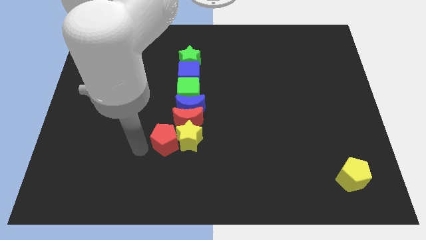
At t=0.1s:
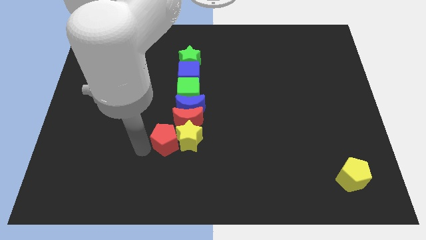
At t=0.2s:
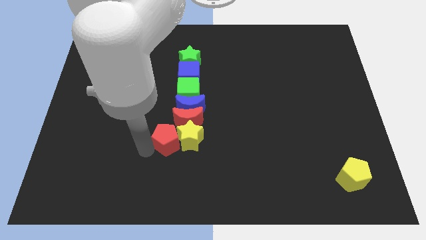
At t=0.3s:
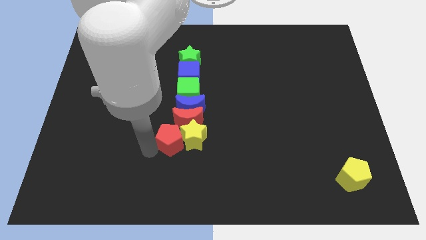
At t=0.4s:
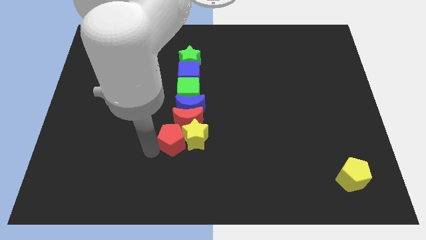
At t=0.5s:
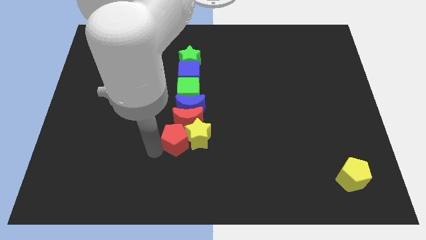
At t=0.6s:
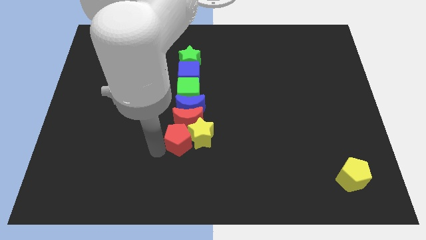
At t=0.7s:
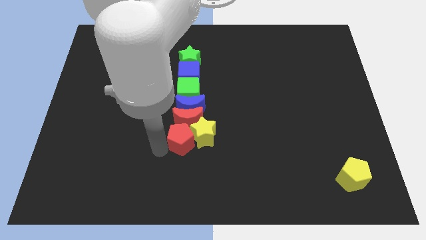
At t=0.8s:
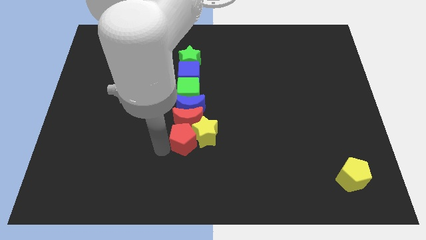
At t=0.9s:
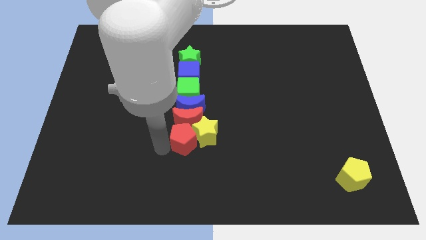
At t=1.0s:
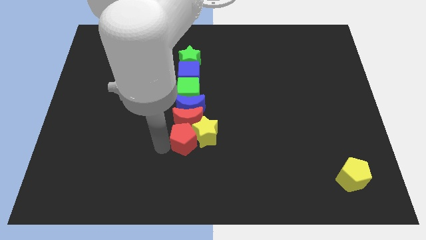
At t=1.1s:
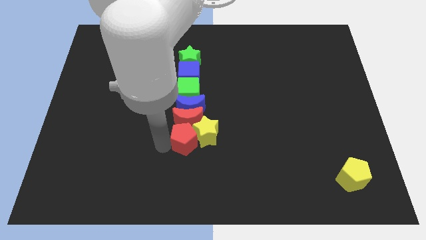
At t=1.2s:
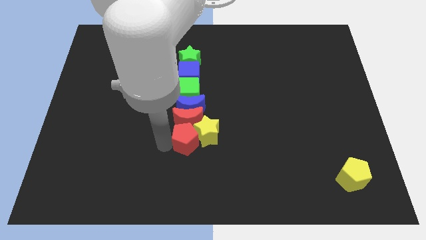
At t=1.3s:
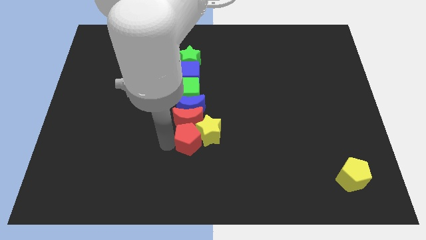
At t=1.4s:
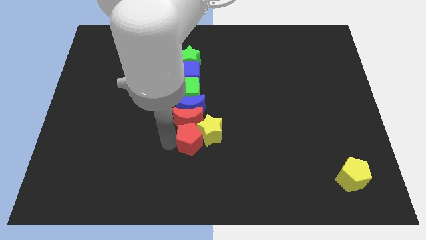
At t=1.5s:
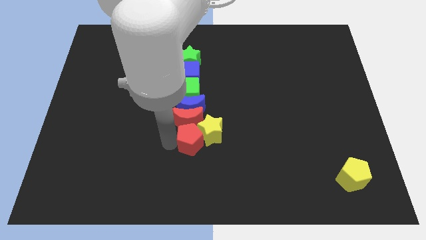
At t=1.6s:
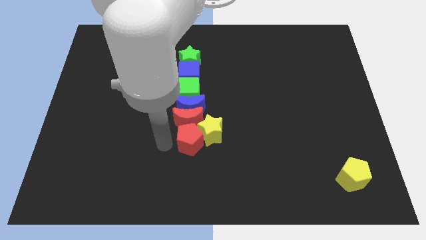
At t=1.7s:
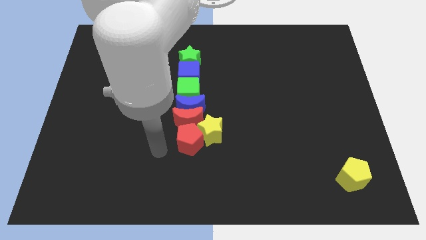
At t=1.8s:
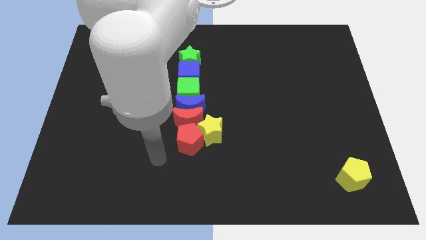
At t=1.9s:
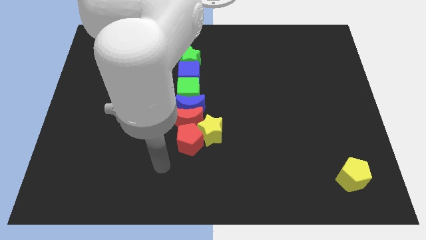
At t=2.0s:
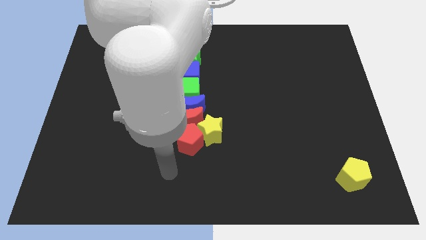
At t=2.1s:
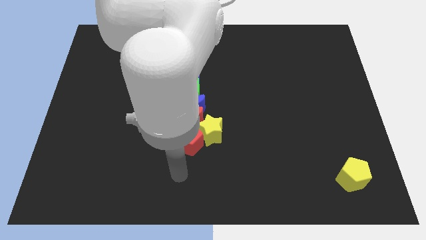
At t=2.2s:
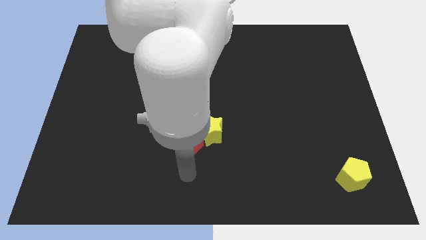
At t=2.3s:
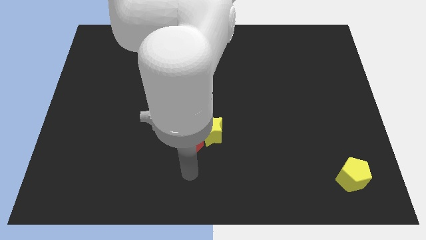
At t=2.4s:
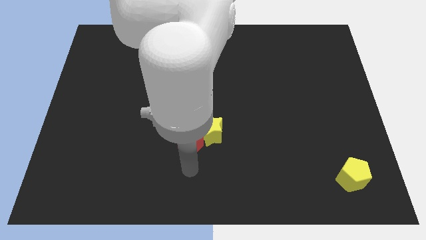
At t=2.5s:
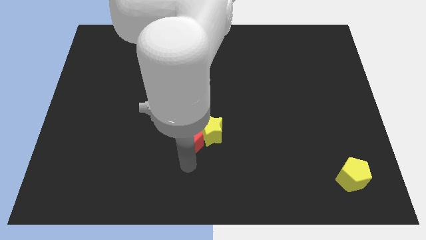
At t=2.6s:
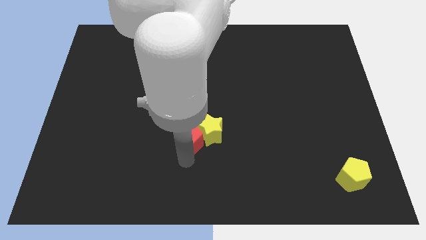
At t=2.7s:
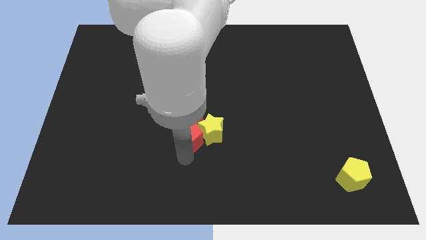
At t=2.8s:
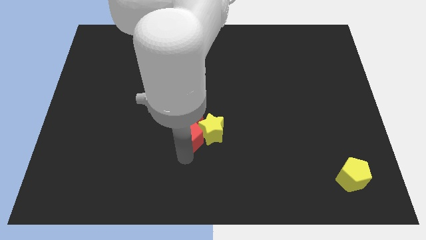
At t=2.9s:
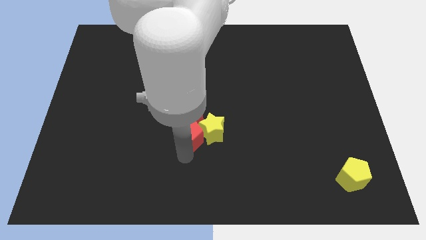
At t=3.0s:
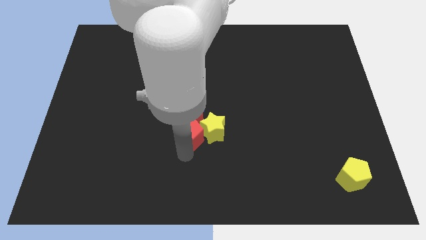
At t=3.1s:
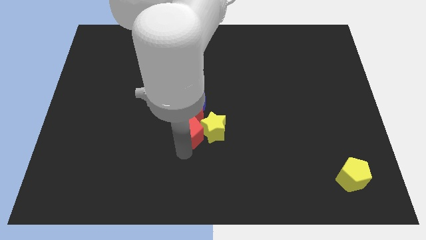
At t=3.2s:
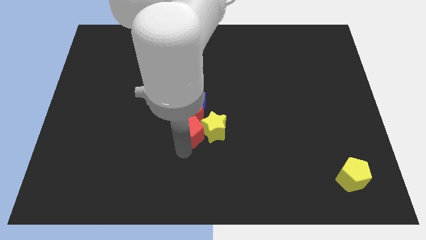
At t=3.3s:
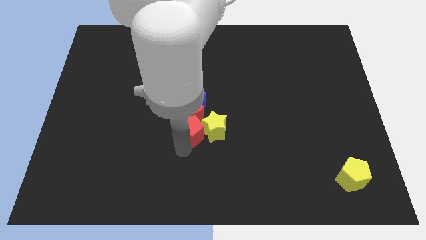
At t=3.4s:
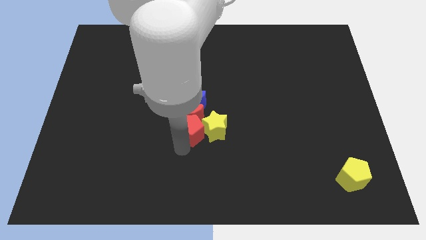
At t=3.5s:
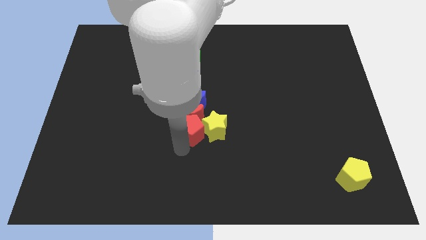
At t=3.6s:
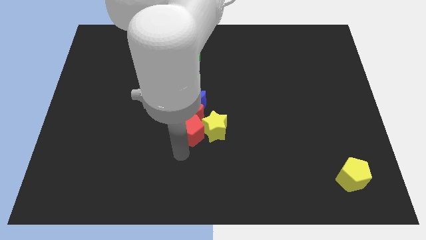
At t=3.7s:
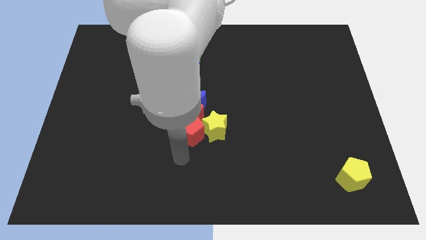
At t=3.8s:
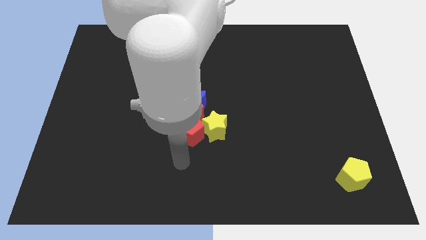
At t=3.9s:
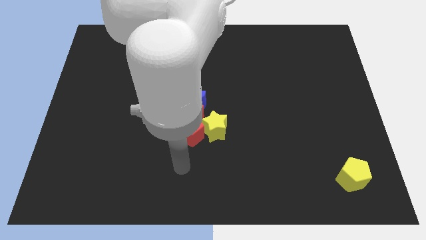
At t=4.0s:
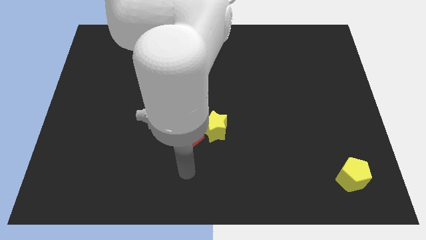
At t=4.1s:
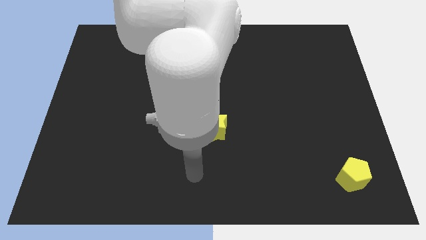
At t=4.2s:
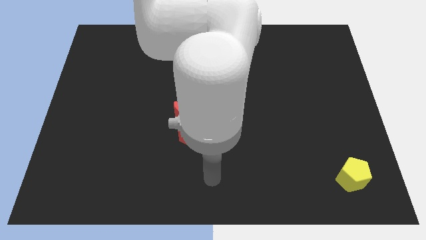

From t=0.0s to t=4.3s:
place the red pentagon below the red cerscent

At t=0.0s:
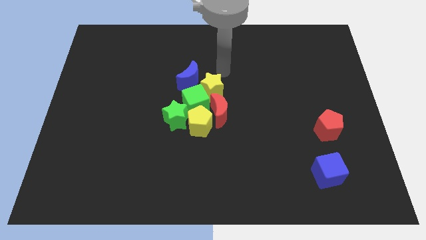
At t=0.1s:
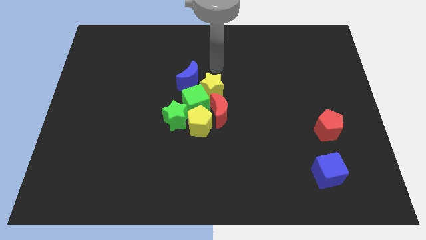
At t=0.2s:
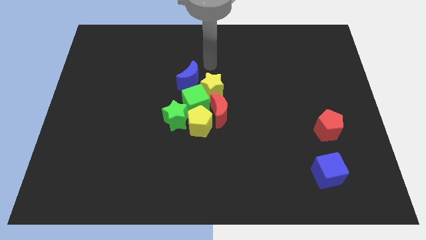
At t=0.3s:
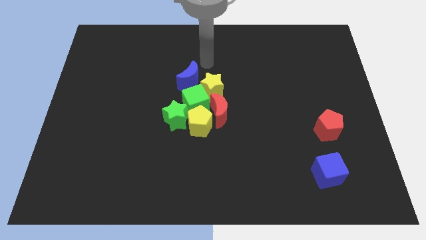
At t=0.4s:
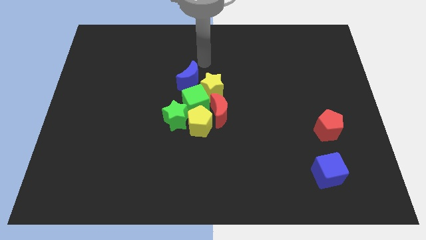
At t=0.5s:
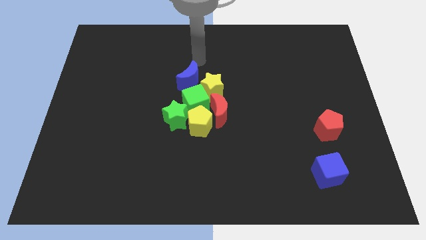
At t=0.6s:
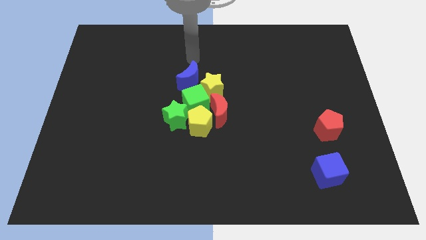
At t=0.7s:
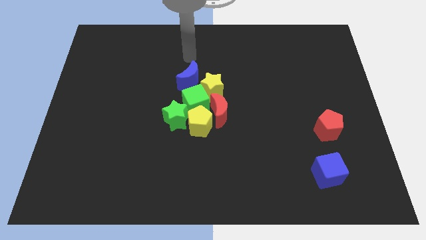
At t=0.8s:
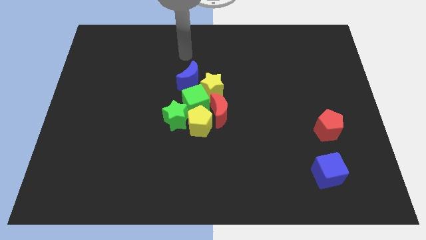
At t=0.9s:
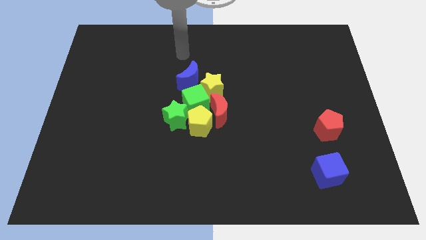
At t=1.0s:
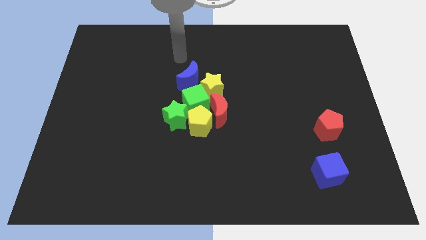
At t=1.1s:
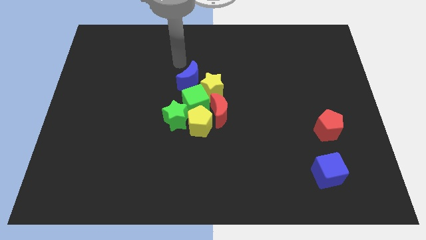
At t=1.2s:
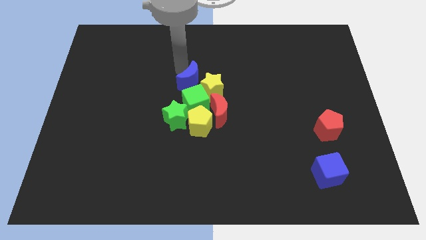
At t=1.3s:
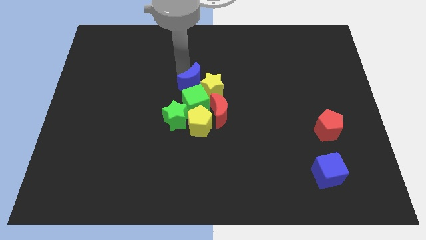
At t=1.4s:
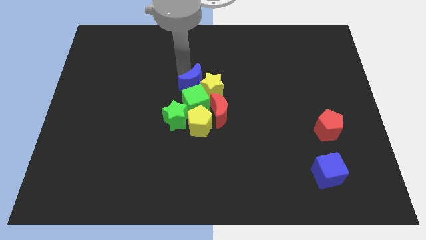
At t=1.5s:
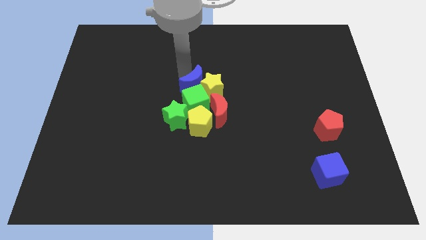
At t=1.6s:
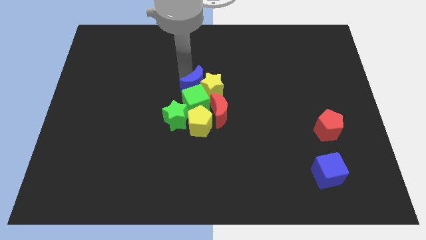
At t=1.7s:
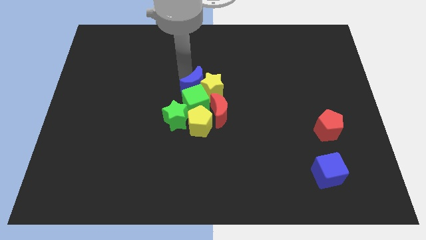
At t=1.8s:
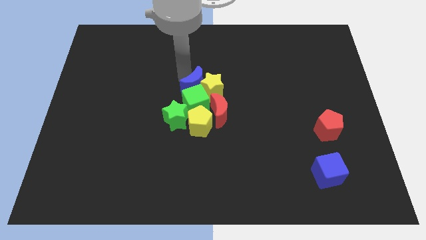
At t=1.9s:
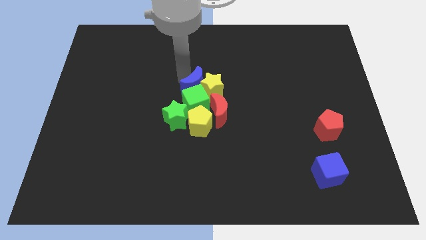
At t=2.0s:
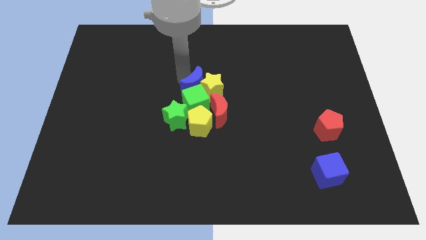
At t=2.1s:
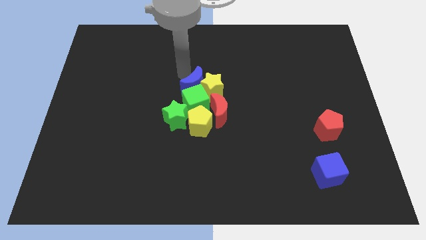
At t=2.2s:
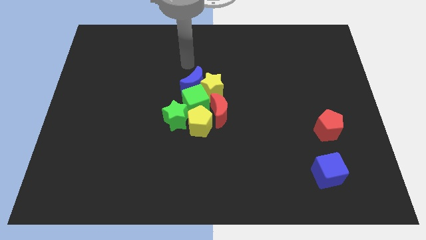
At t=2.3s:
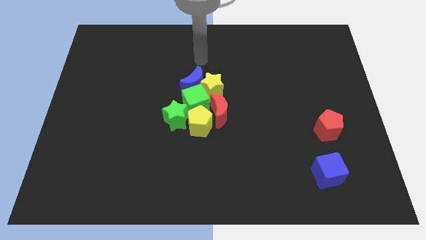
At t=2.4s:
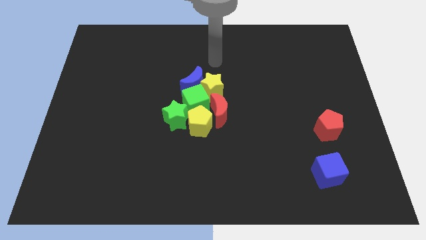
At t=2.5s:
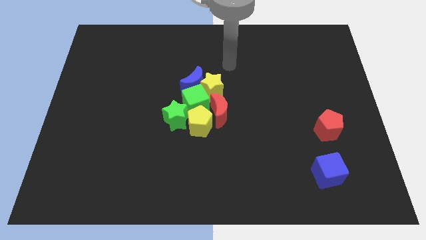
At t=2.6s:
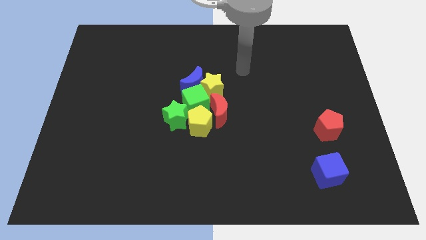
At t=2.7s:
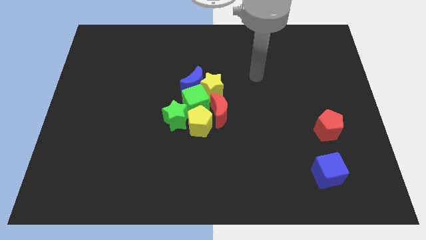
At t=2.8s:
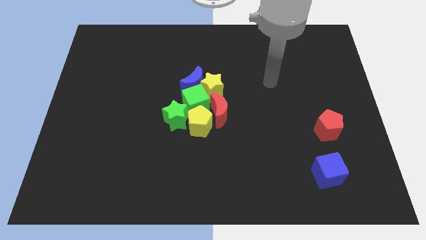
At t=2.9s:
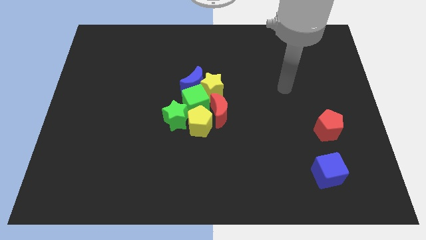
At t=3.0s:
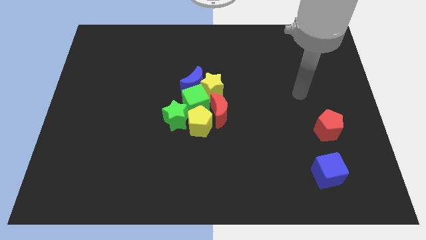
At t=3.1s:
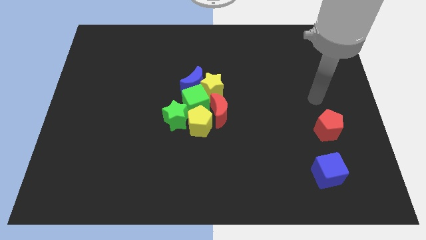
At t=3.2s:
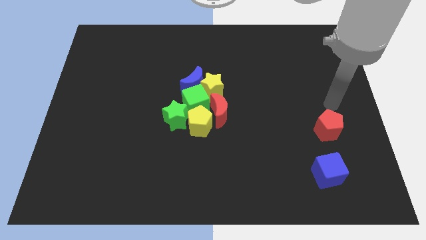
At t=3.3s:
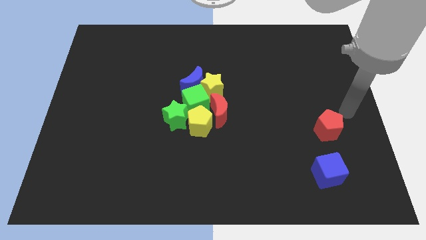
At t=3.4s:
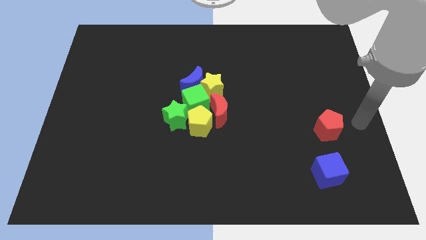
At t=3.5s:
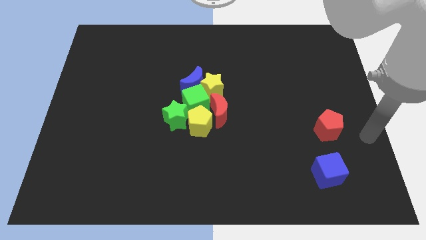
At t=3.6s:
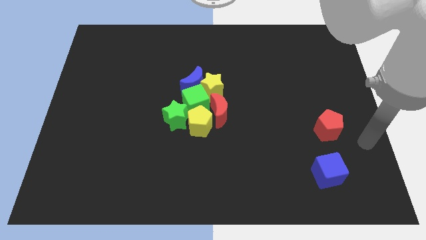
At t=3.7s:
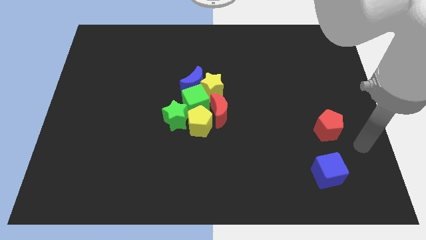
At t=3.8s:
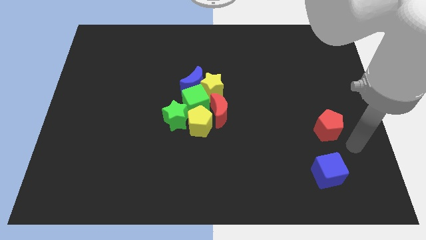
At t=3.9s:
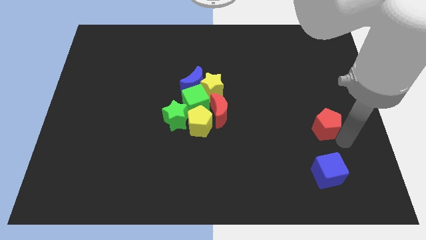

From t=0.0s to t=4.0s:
push the blue moon into the group of blocks

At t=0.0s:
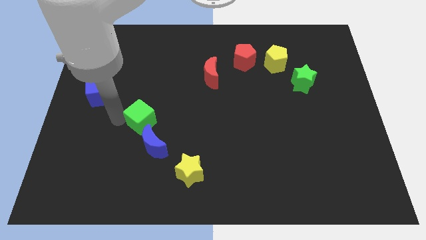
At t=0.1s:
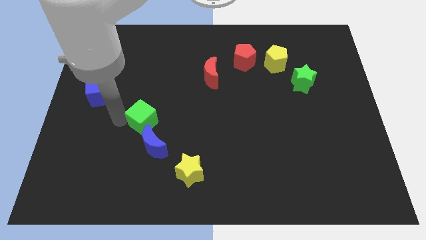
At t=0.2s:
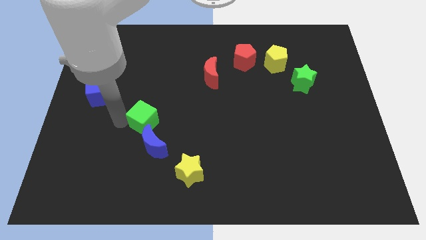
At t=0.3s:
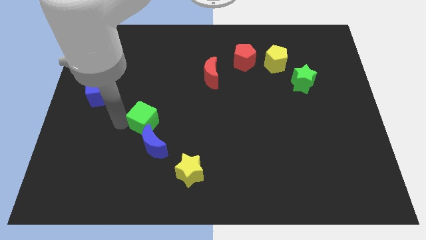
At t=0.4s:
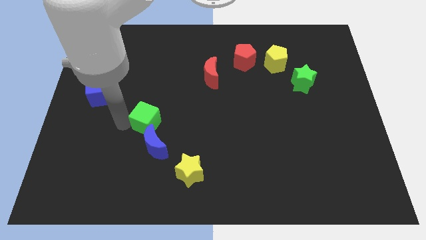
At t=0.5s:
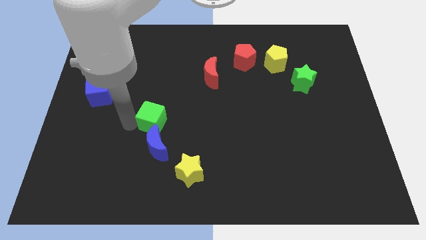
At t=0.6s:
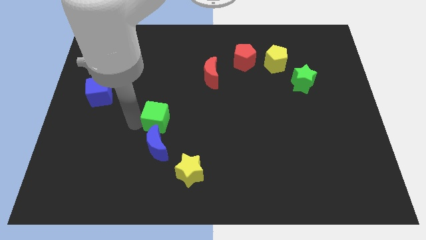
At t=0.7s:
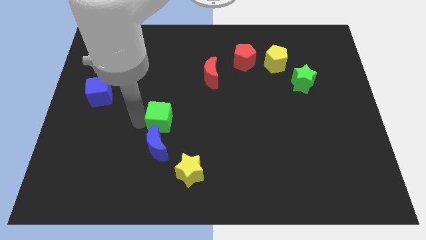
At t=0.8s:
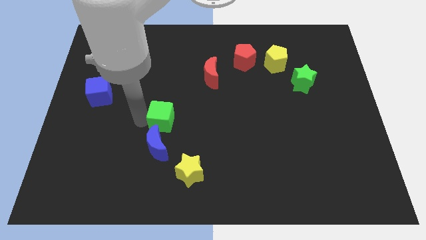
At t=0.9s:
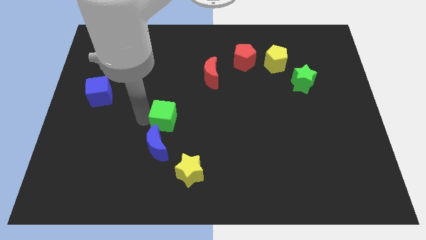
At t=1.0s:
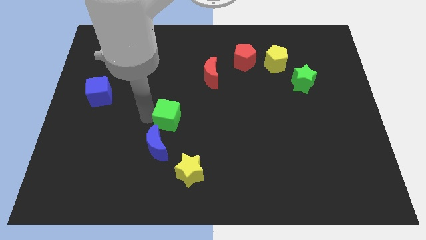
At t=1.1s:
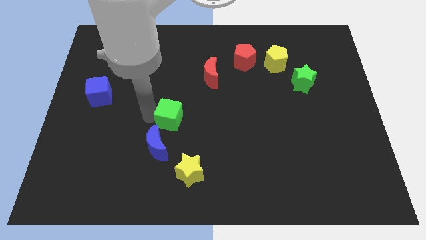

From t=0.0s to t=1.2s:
place green cube to the top blue moon
